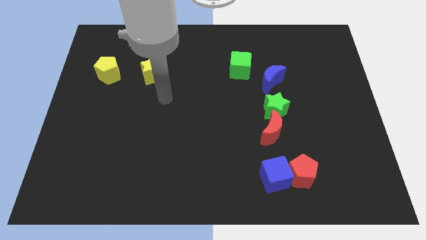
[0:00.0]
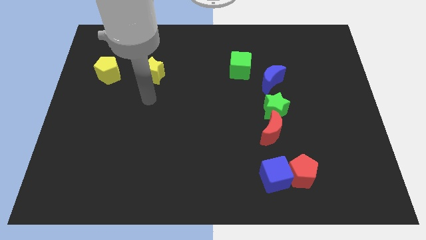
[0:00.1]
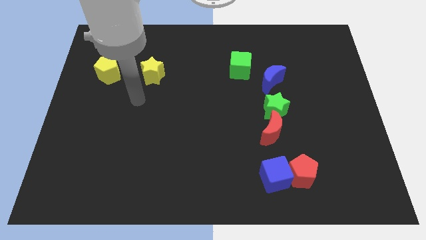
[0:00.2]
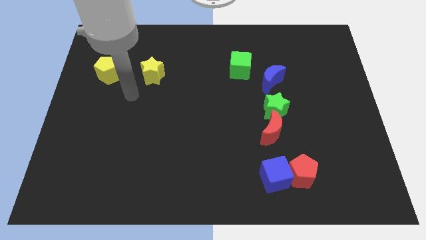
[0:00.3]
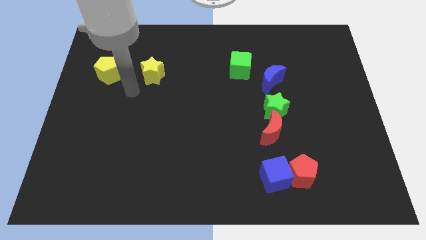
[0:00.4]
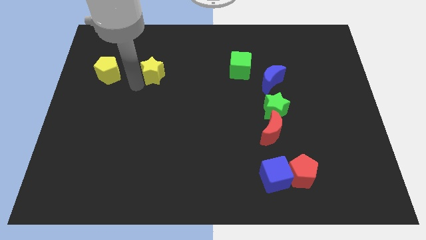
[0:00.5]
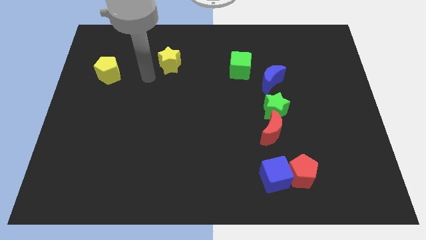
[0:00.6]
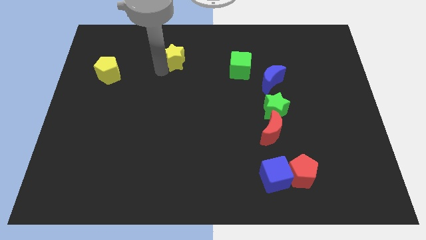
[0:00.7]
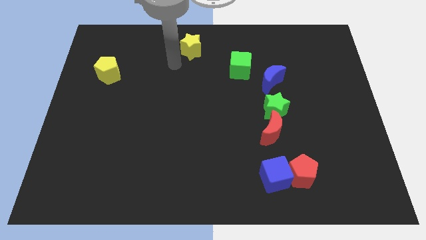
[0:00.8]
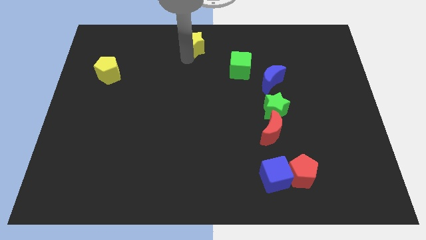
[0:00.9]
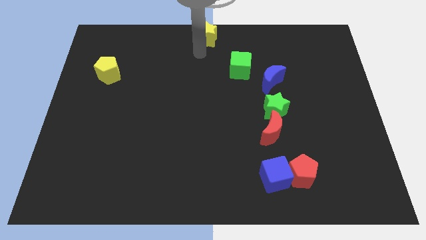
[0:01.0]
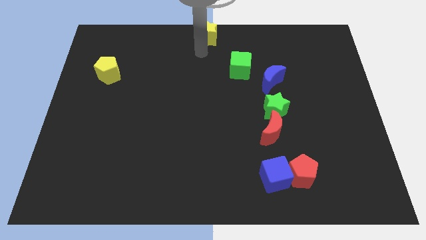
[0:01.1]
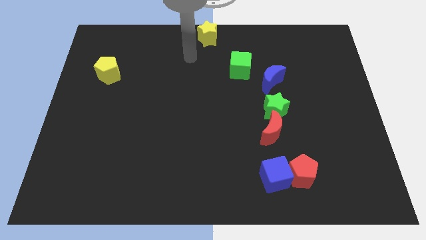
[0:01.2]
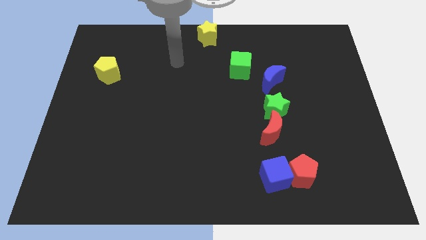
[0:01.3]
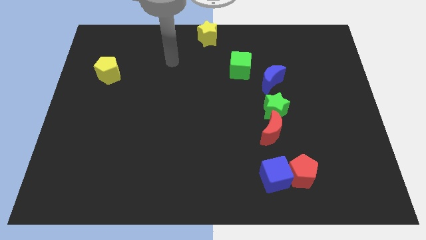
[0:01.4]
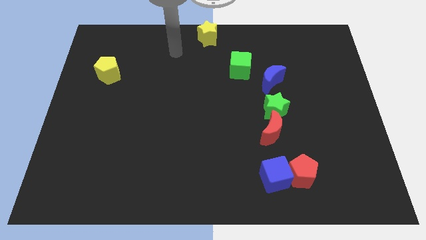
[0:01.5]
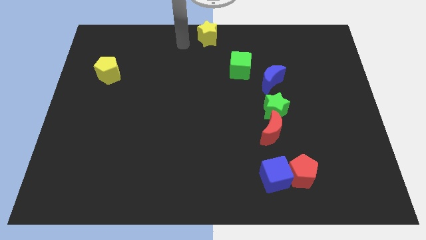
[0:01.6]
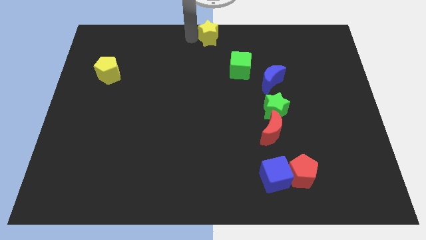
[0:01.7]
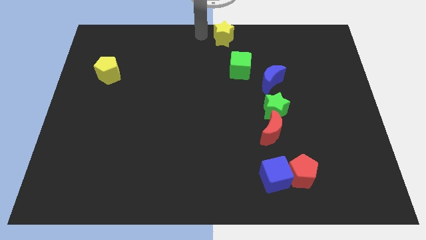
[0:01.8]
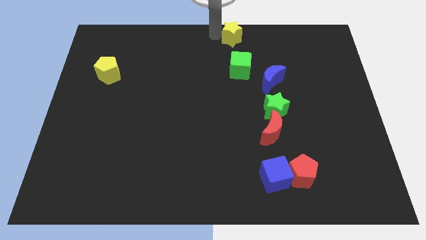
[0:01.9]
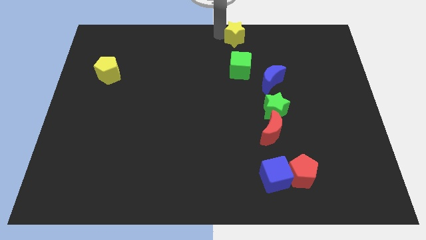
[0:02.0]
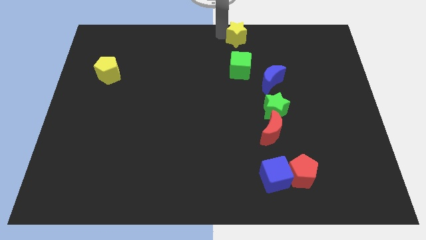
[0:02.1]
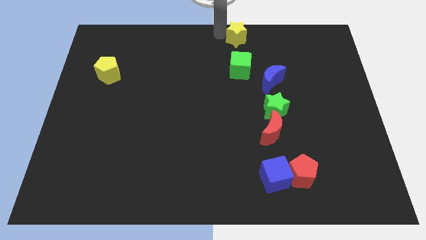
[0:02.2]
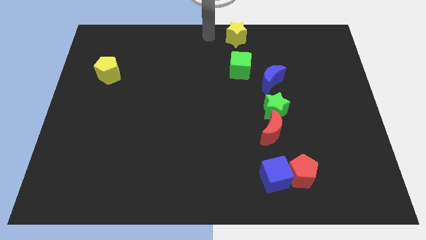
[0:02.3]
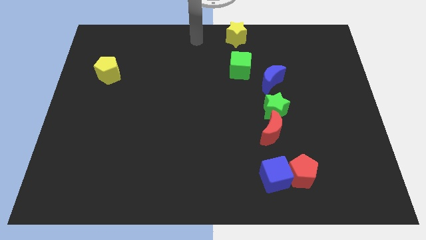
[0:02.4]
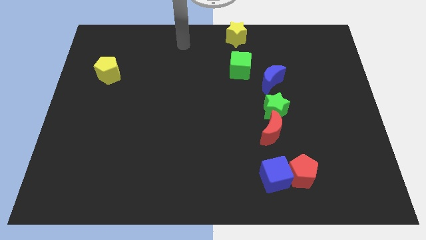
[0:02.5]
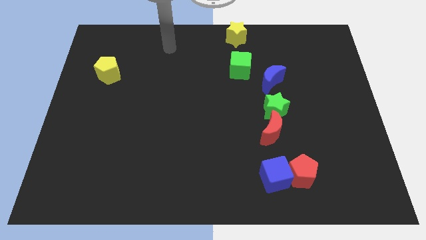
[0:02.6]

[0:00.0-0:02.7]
move yellow pentagon slightly right

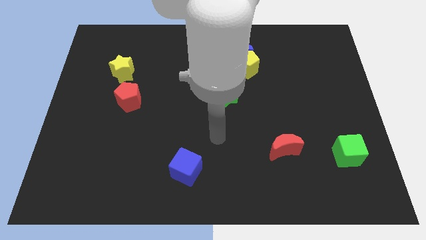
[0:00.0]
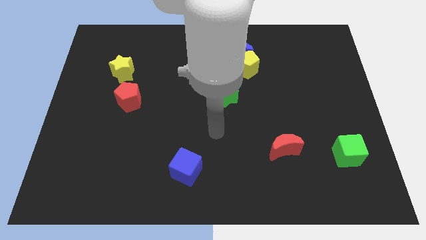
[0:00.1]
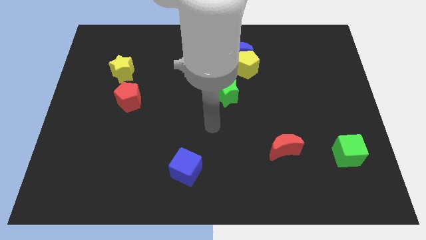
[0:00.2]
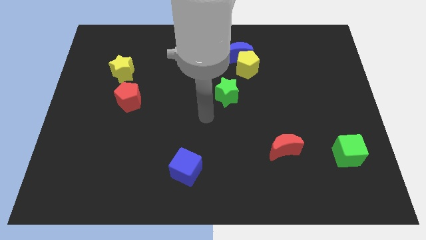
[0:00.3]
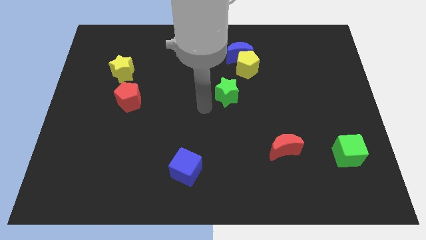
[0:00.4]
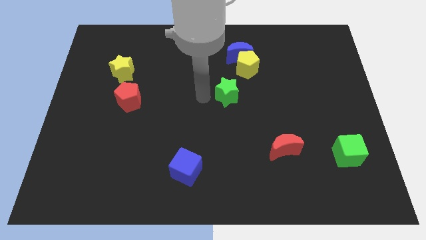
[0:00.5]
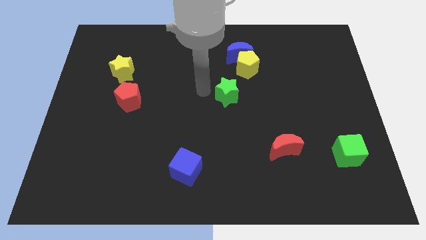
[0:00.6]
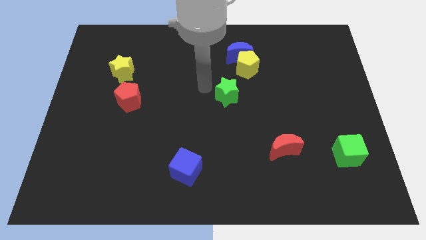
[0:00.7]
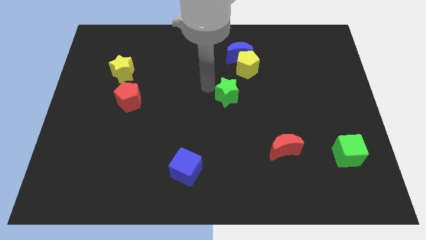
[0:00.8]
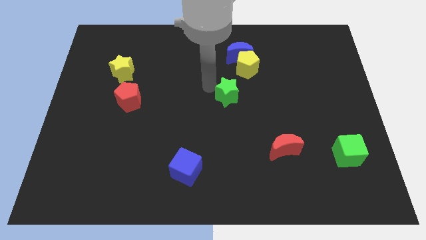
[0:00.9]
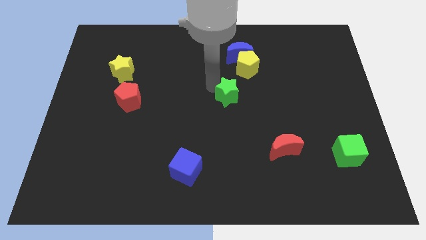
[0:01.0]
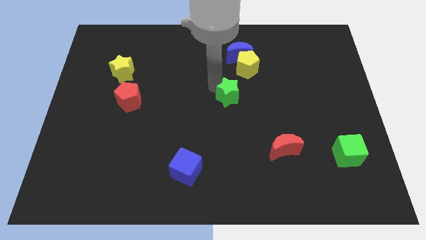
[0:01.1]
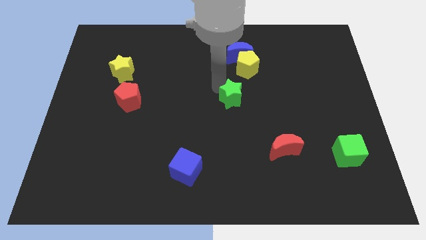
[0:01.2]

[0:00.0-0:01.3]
move your arm left diagonally to the green star

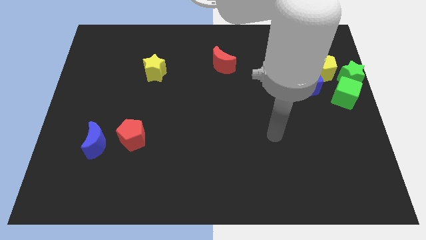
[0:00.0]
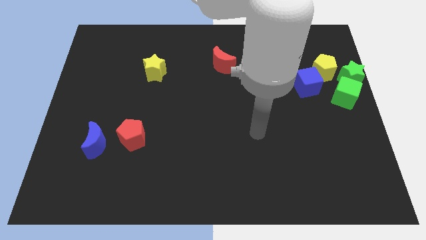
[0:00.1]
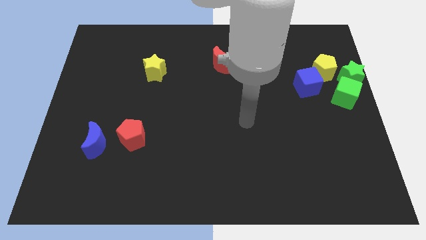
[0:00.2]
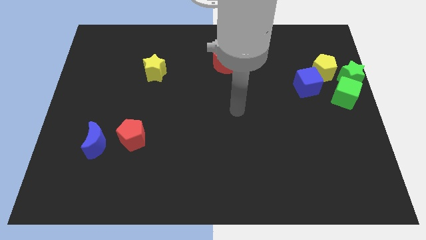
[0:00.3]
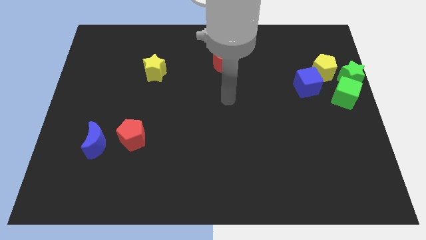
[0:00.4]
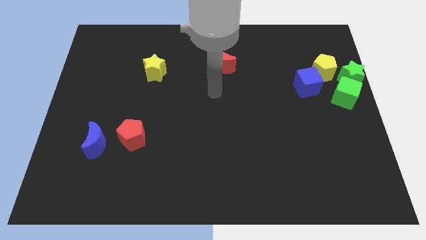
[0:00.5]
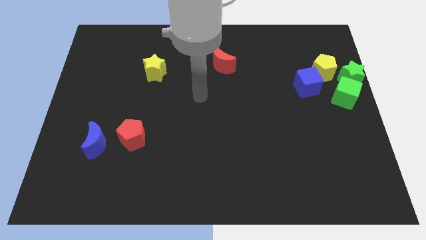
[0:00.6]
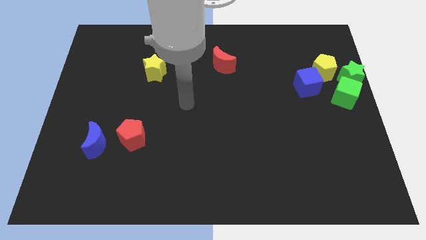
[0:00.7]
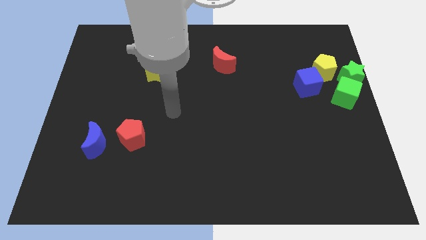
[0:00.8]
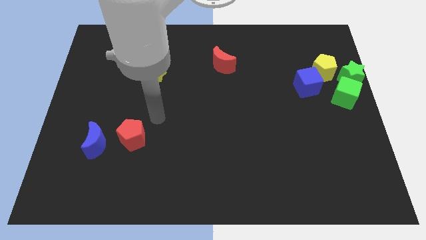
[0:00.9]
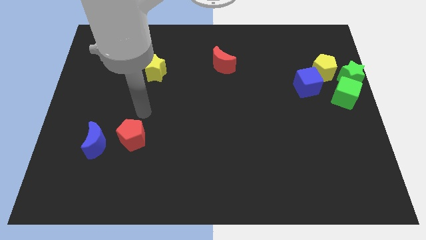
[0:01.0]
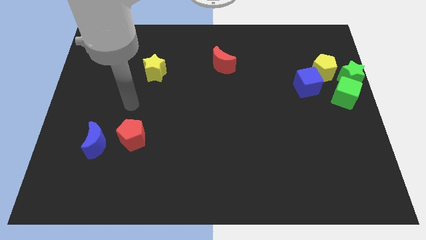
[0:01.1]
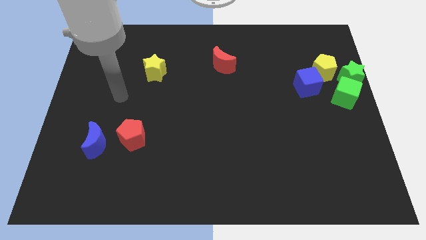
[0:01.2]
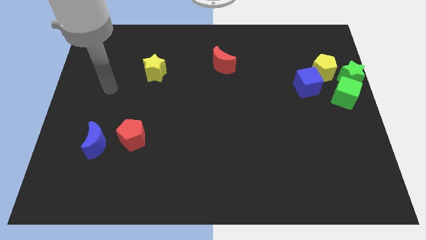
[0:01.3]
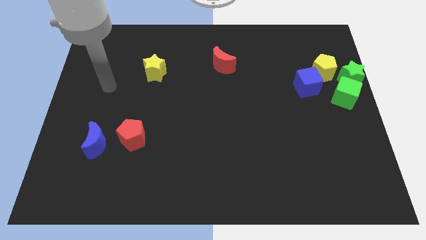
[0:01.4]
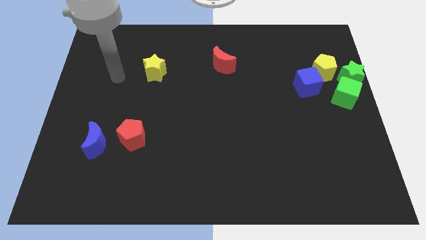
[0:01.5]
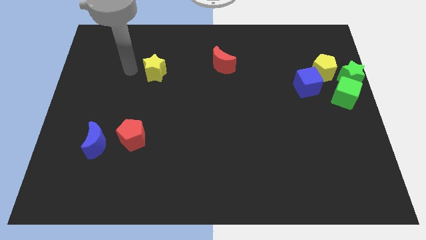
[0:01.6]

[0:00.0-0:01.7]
place your arm left to the yellow star

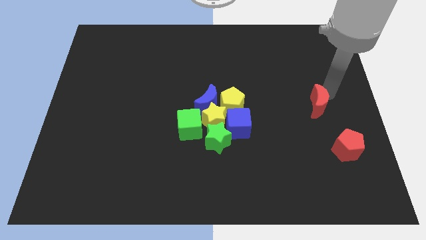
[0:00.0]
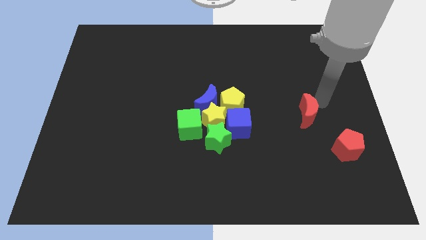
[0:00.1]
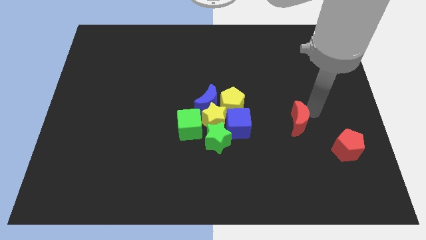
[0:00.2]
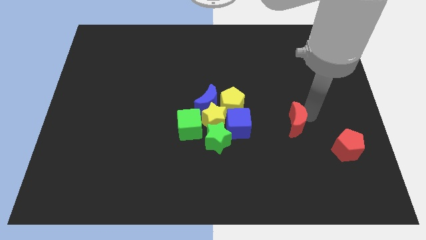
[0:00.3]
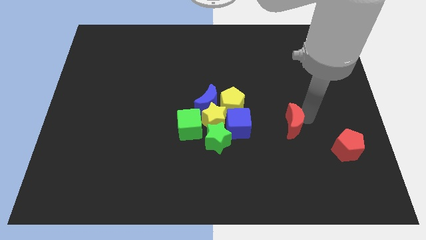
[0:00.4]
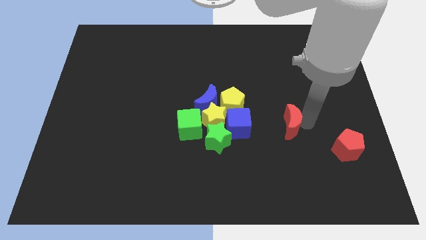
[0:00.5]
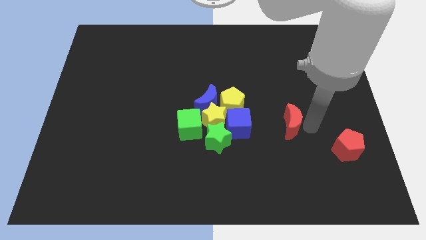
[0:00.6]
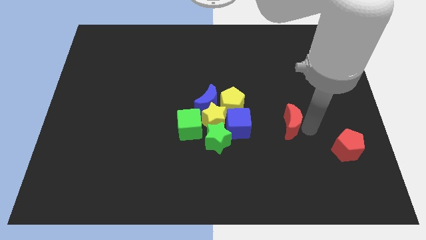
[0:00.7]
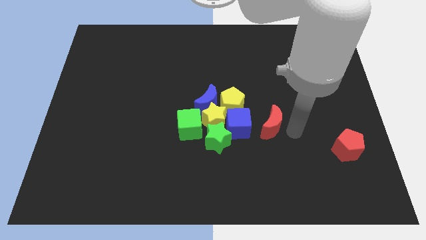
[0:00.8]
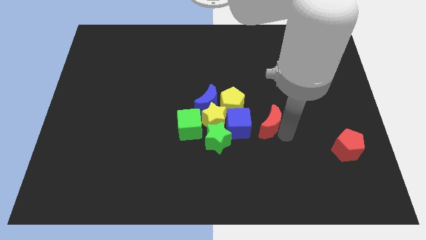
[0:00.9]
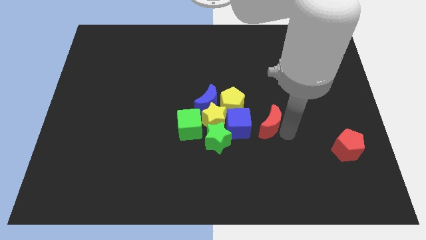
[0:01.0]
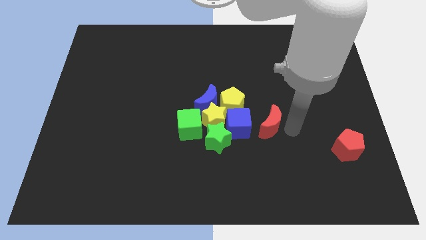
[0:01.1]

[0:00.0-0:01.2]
place the red moon parallel to the blue cube

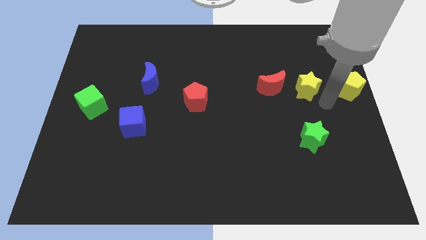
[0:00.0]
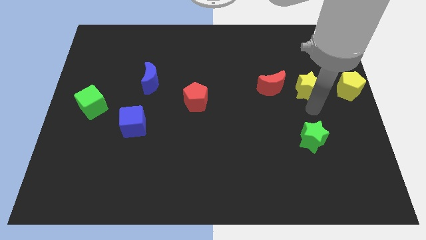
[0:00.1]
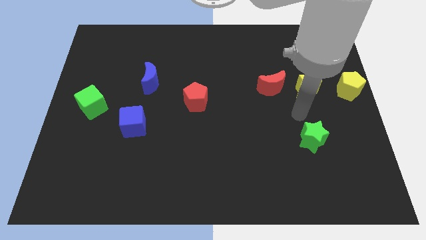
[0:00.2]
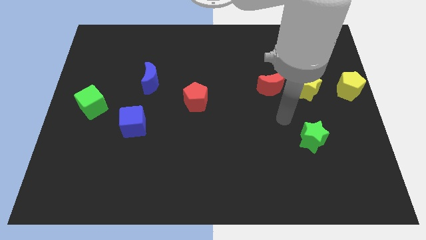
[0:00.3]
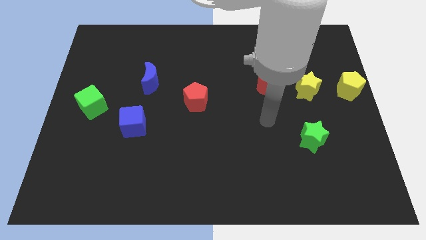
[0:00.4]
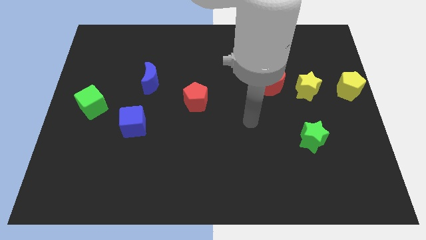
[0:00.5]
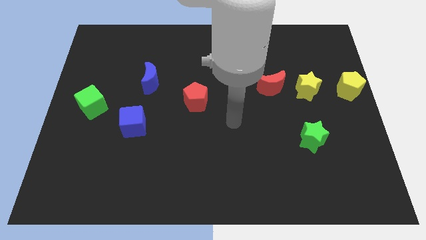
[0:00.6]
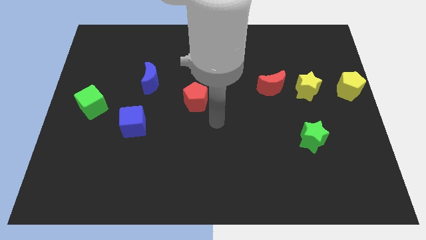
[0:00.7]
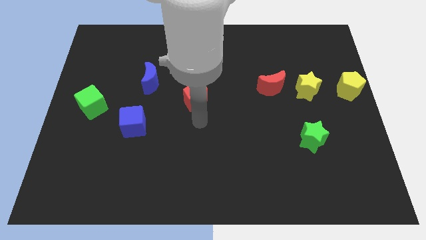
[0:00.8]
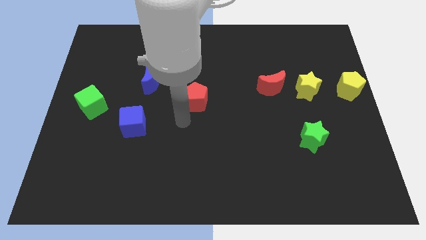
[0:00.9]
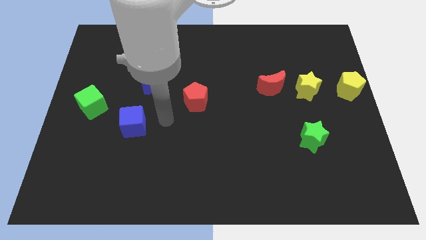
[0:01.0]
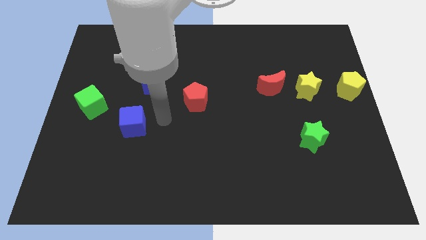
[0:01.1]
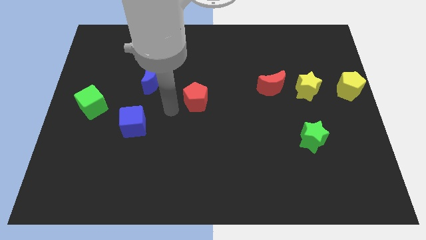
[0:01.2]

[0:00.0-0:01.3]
move your arm from the bottom of the yellow pentagon to the left of the red pentagon

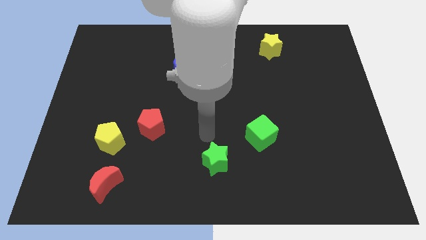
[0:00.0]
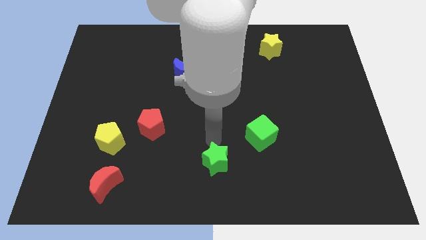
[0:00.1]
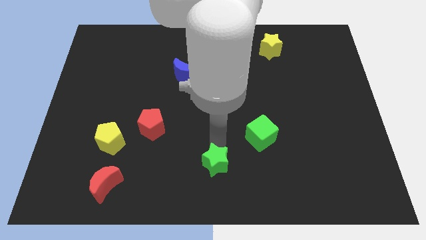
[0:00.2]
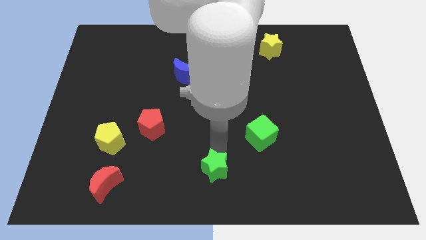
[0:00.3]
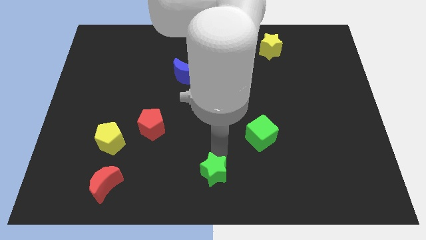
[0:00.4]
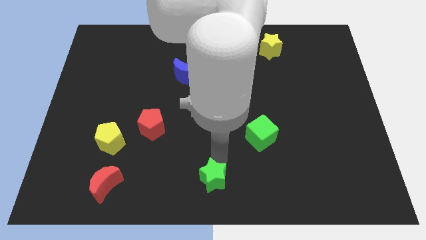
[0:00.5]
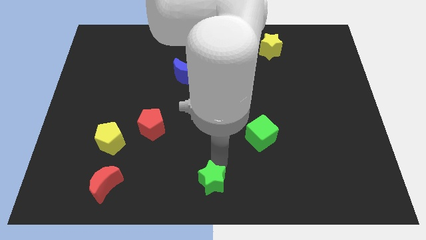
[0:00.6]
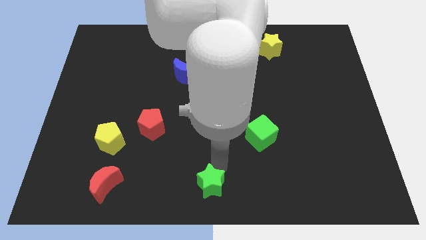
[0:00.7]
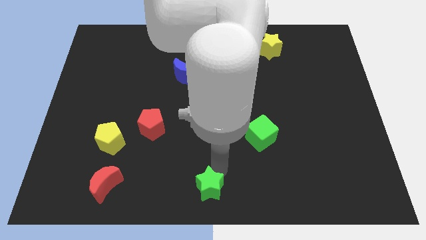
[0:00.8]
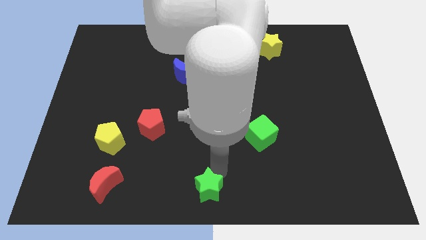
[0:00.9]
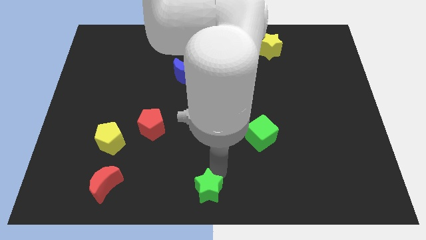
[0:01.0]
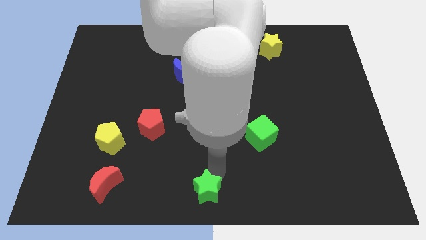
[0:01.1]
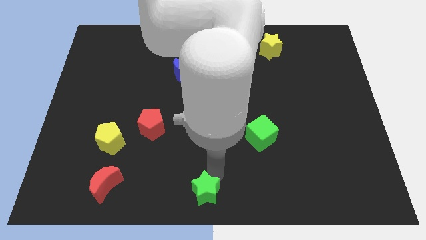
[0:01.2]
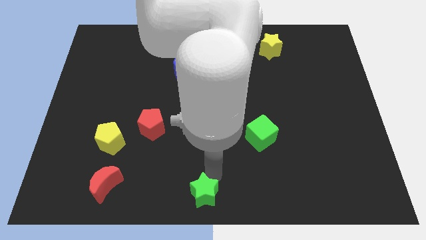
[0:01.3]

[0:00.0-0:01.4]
move the green star to the bottom center of the board
